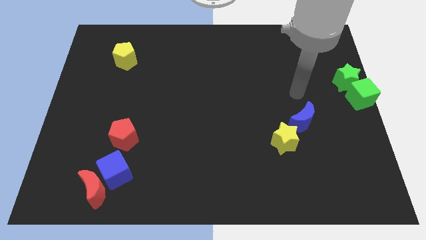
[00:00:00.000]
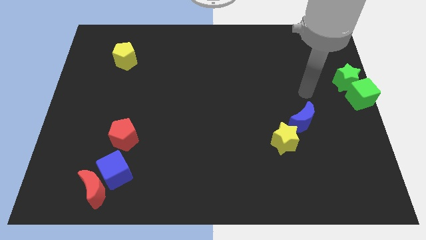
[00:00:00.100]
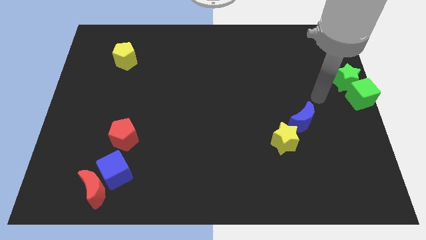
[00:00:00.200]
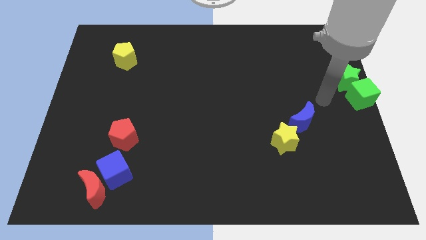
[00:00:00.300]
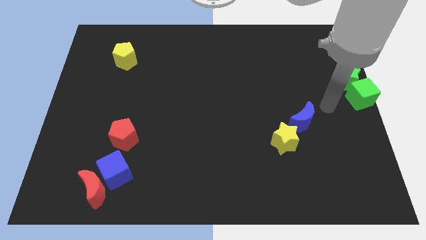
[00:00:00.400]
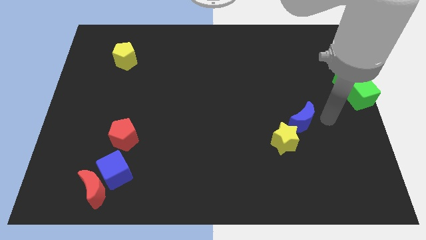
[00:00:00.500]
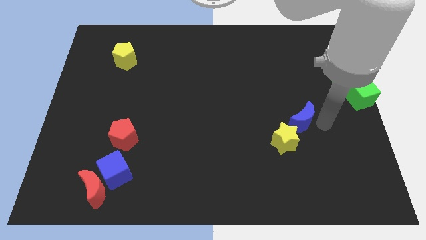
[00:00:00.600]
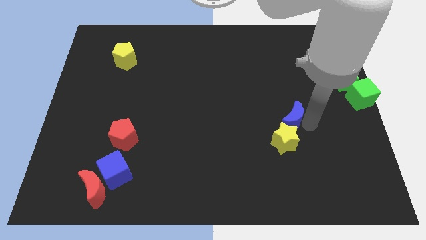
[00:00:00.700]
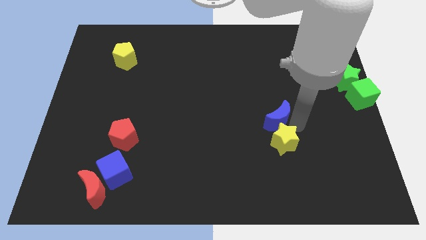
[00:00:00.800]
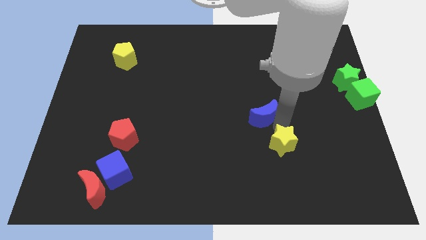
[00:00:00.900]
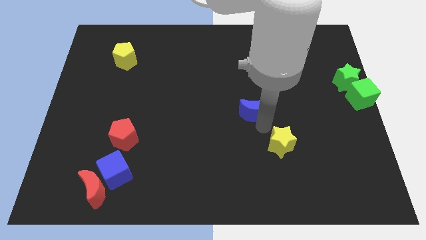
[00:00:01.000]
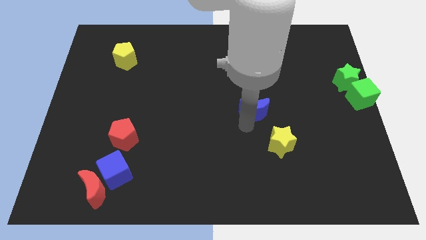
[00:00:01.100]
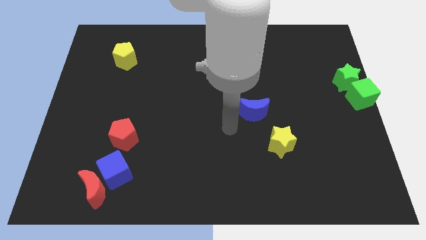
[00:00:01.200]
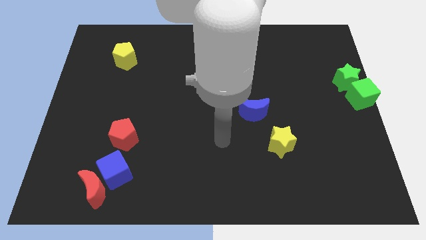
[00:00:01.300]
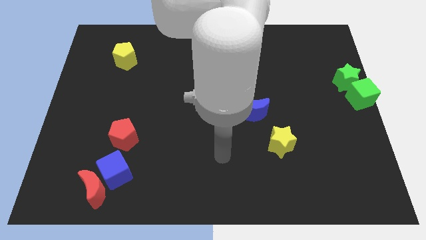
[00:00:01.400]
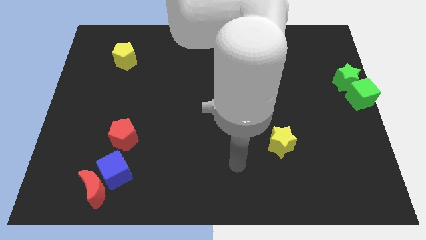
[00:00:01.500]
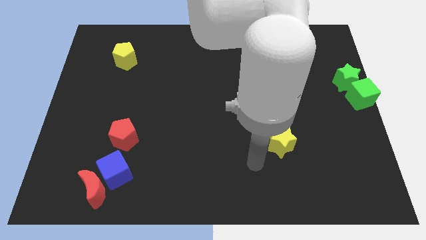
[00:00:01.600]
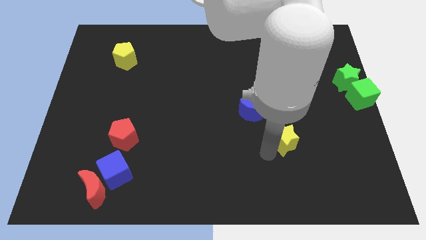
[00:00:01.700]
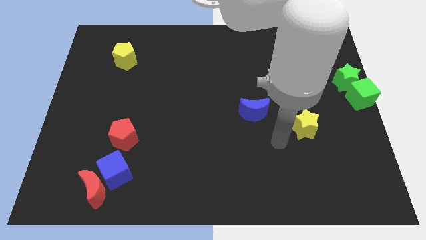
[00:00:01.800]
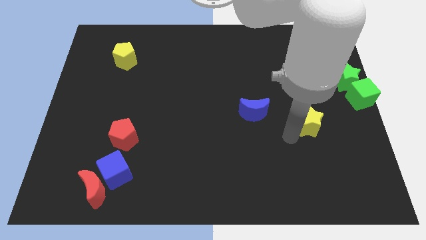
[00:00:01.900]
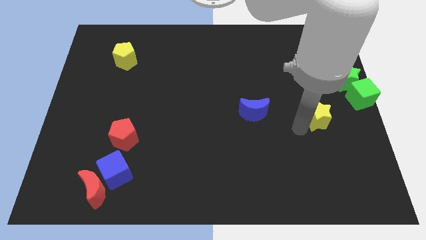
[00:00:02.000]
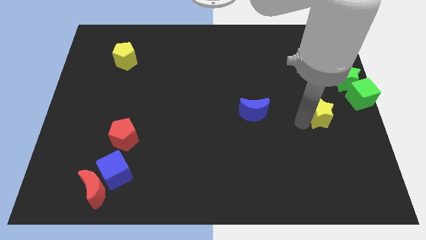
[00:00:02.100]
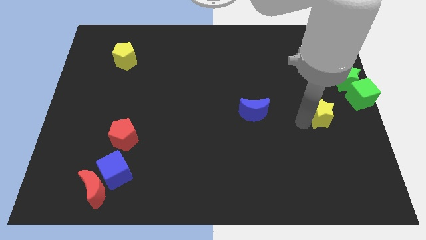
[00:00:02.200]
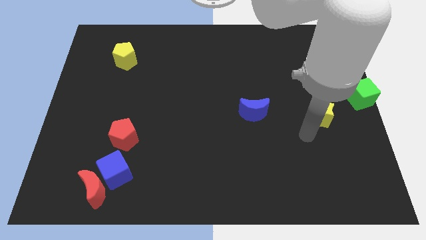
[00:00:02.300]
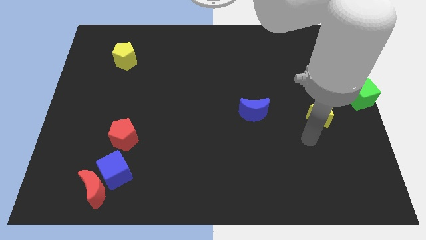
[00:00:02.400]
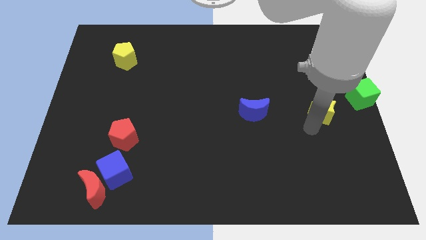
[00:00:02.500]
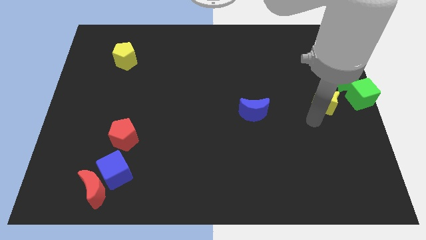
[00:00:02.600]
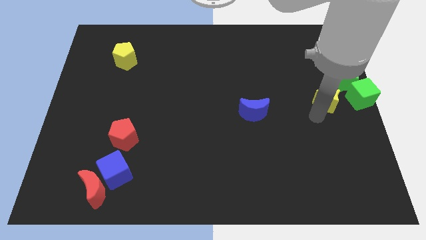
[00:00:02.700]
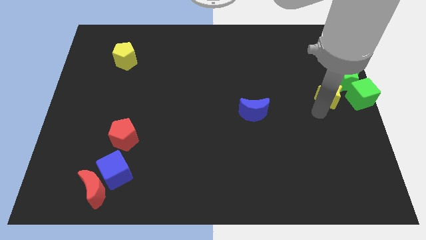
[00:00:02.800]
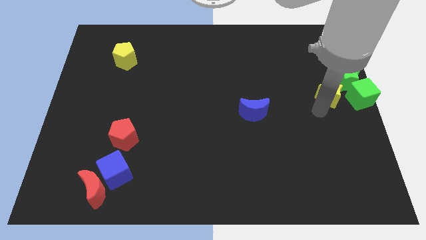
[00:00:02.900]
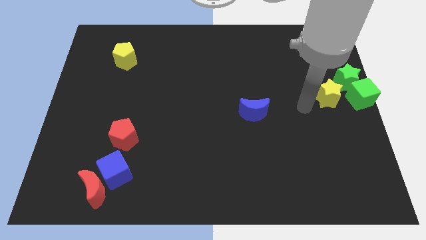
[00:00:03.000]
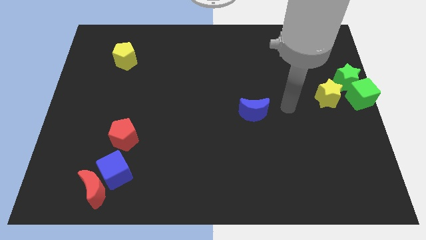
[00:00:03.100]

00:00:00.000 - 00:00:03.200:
place the yellow star at the left side of the green blocks

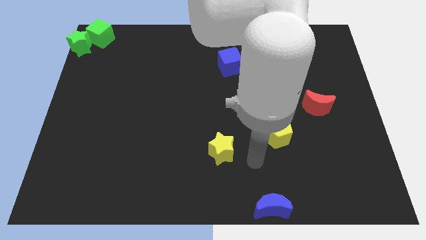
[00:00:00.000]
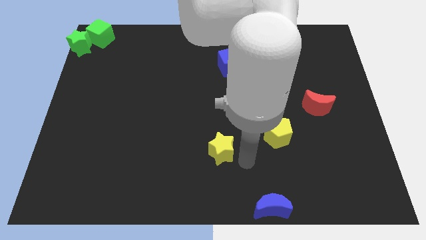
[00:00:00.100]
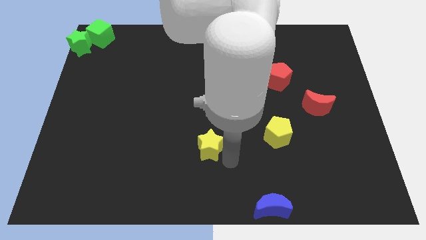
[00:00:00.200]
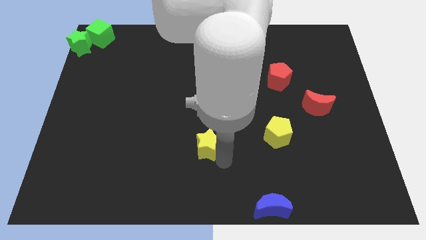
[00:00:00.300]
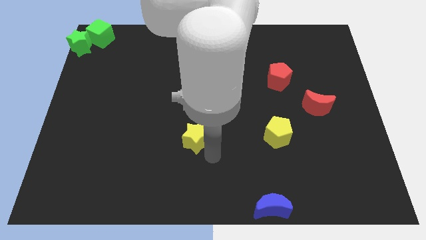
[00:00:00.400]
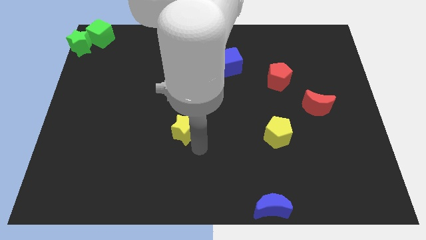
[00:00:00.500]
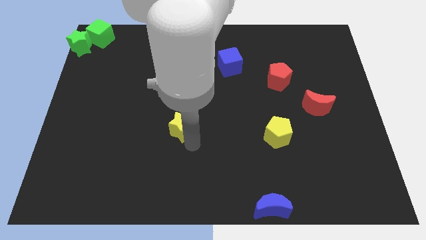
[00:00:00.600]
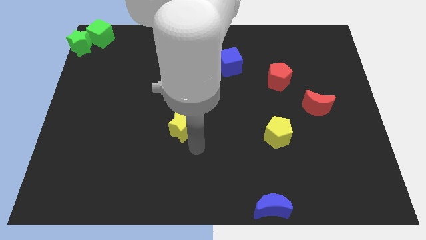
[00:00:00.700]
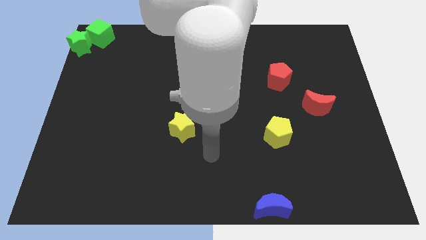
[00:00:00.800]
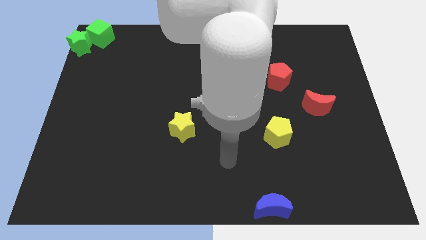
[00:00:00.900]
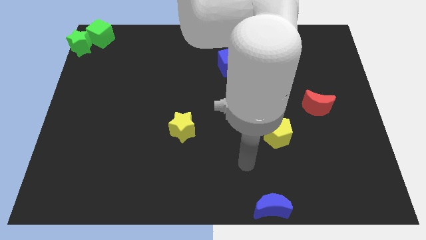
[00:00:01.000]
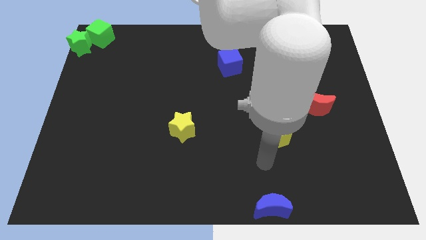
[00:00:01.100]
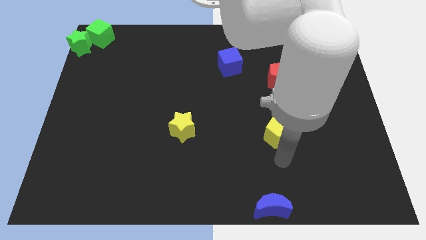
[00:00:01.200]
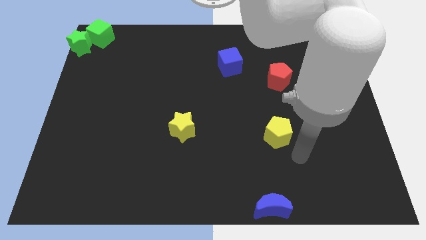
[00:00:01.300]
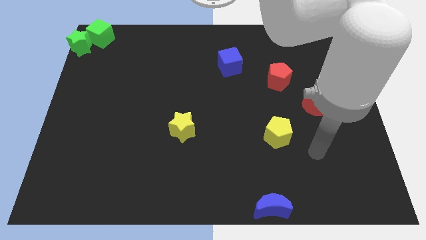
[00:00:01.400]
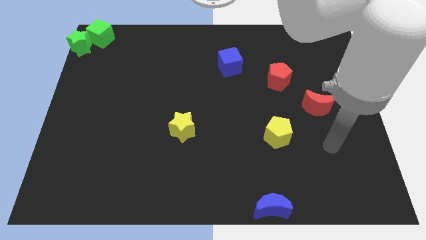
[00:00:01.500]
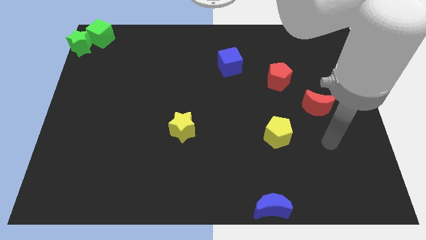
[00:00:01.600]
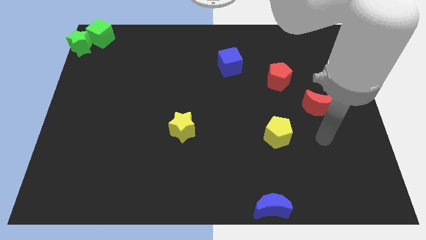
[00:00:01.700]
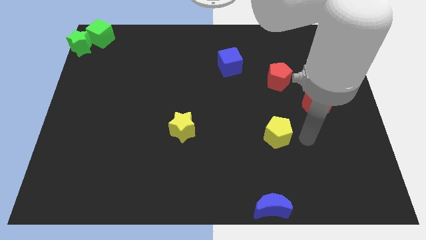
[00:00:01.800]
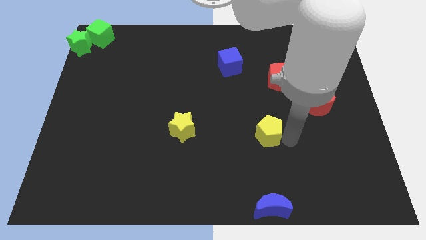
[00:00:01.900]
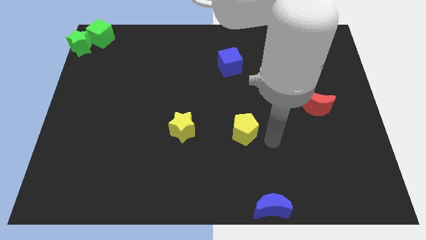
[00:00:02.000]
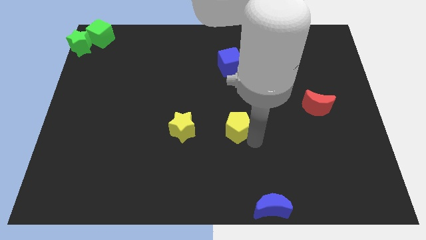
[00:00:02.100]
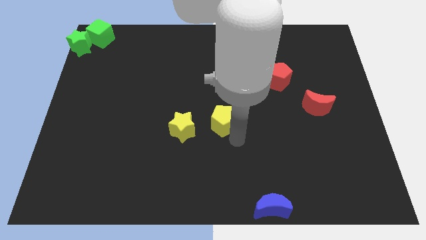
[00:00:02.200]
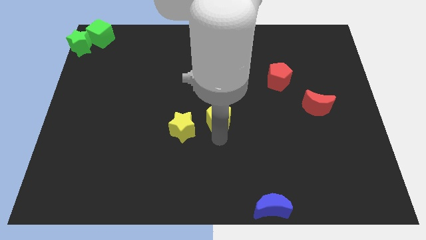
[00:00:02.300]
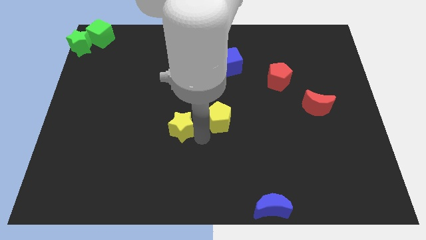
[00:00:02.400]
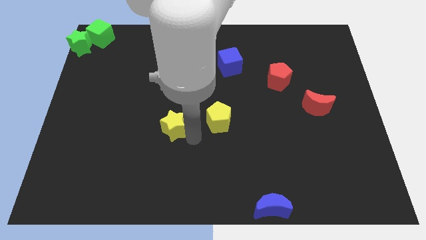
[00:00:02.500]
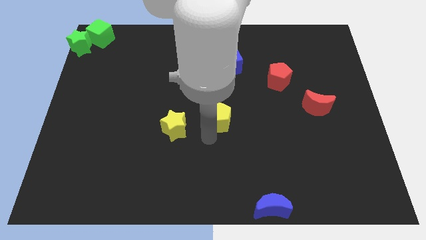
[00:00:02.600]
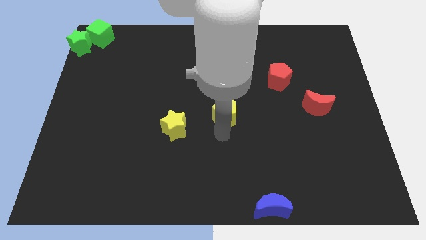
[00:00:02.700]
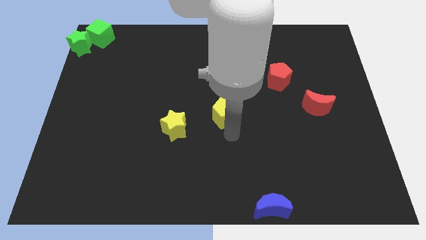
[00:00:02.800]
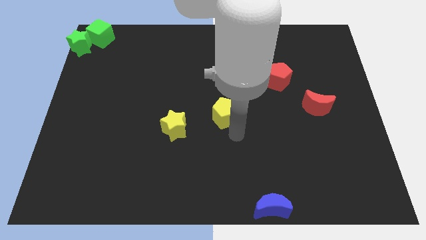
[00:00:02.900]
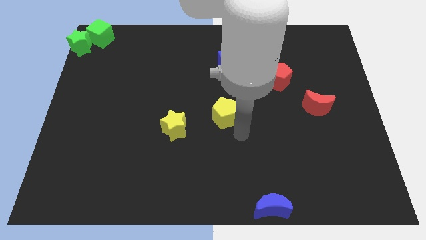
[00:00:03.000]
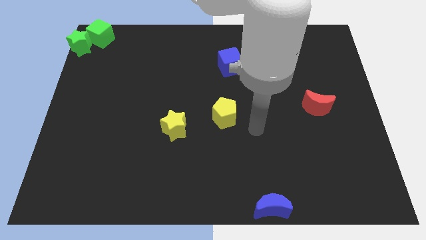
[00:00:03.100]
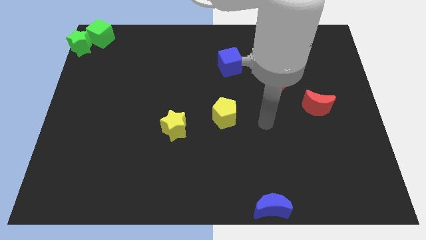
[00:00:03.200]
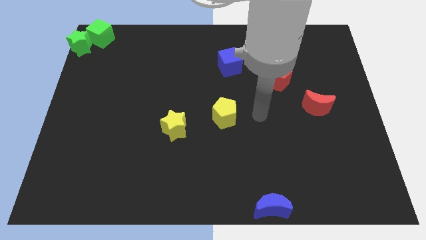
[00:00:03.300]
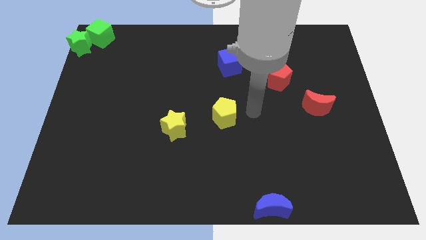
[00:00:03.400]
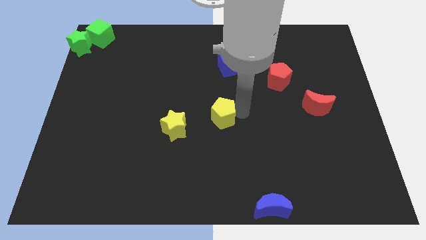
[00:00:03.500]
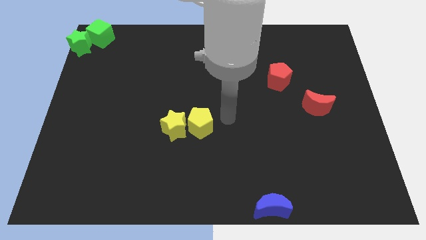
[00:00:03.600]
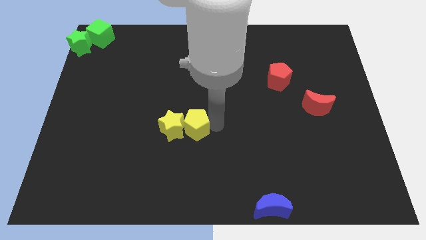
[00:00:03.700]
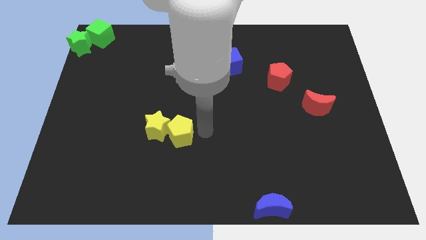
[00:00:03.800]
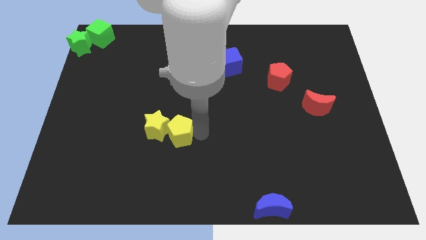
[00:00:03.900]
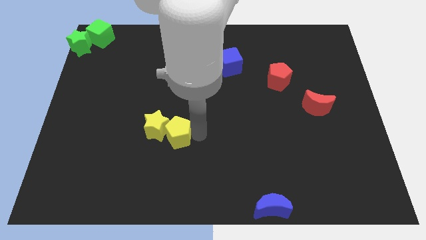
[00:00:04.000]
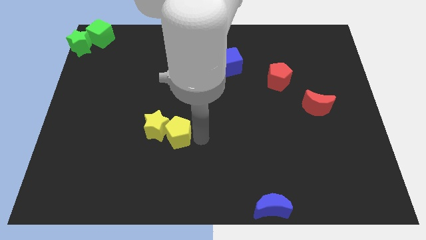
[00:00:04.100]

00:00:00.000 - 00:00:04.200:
push yellow pentagon towards yellow star

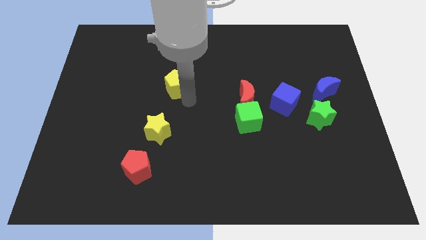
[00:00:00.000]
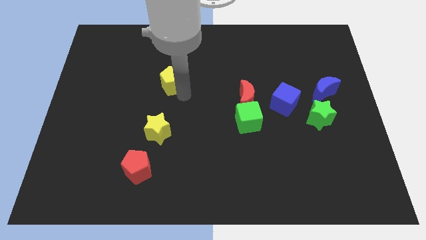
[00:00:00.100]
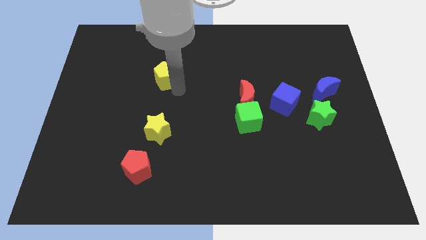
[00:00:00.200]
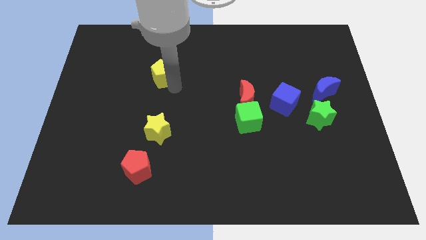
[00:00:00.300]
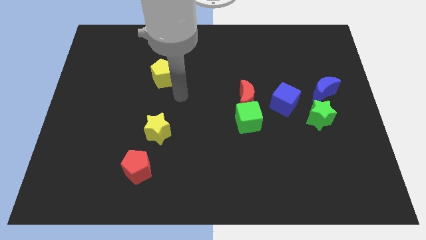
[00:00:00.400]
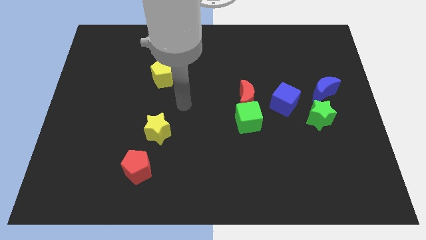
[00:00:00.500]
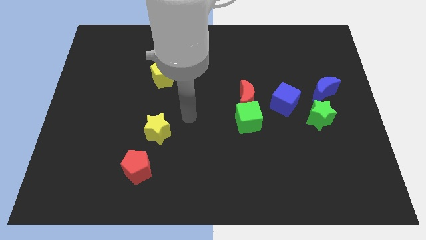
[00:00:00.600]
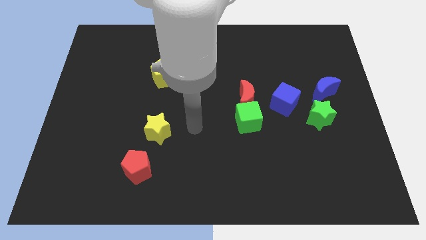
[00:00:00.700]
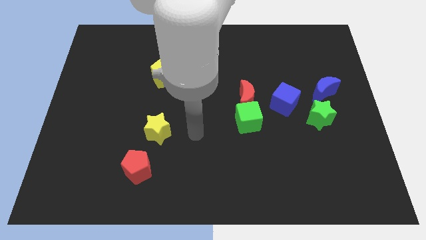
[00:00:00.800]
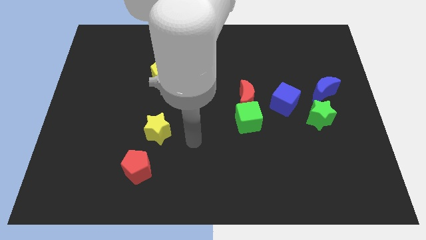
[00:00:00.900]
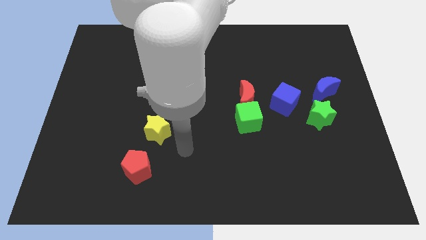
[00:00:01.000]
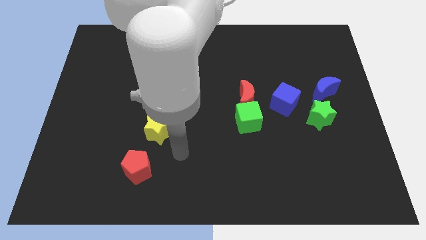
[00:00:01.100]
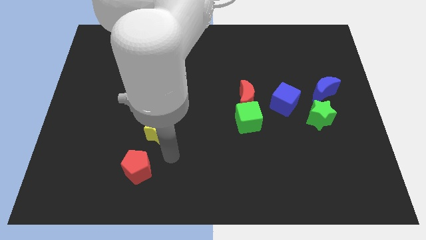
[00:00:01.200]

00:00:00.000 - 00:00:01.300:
move the yellow pentagon to the top of the yellow star

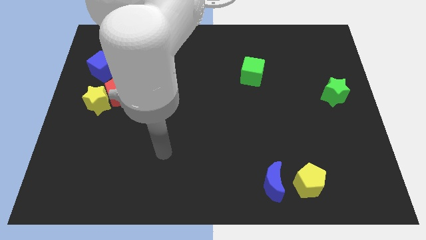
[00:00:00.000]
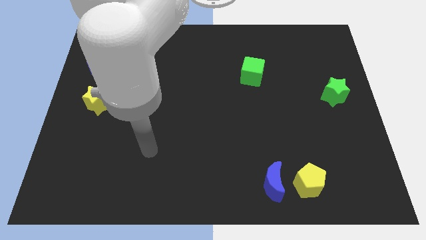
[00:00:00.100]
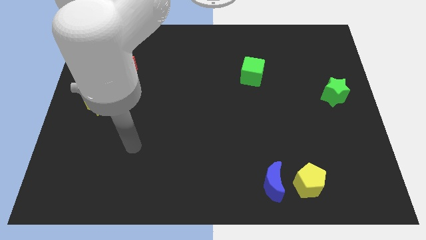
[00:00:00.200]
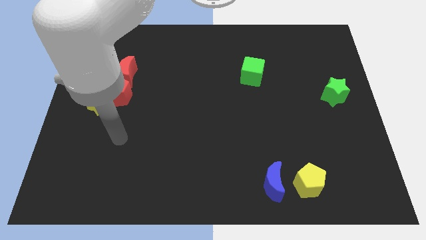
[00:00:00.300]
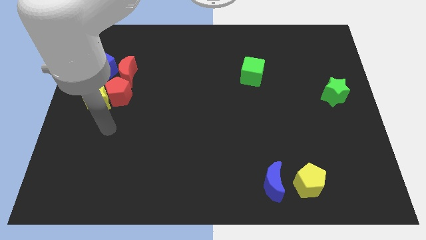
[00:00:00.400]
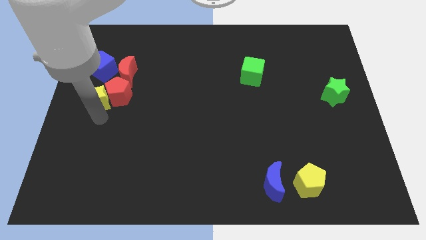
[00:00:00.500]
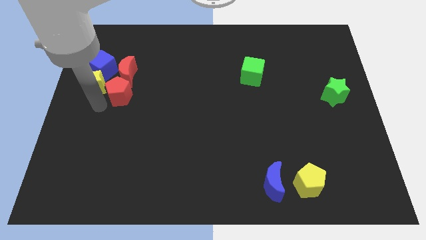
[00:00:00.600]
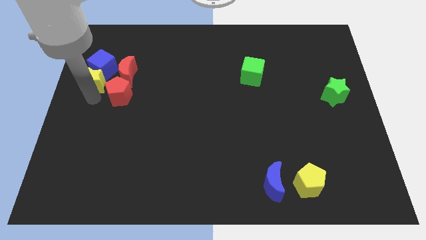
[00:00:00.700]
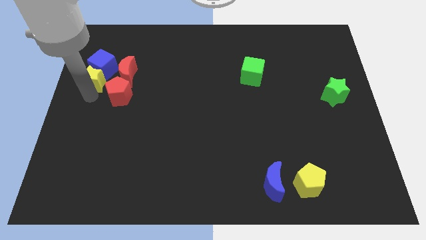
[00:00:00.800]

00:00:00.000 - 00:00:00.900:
move the yellow star slightly up
